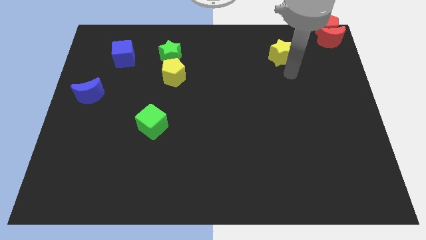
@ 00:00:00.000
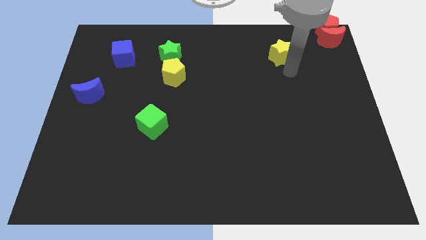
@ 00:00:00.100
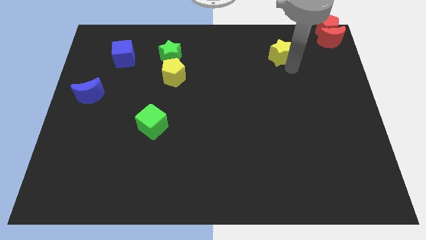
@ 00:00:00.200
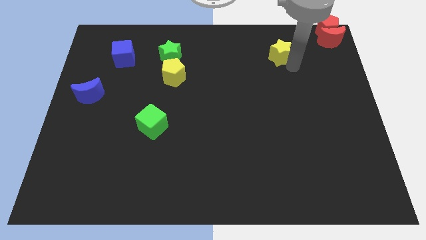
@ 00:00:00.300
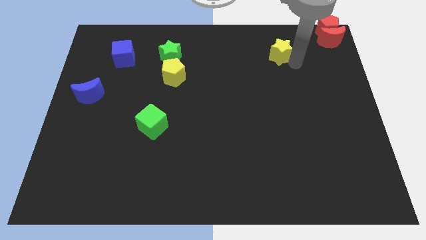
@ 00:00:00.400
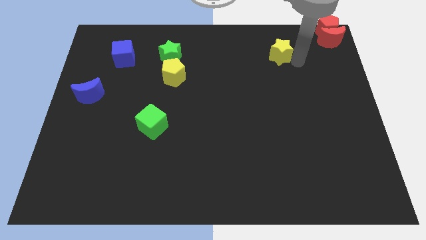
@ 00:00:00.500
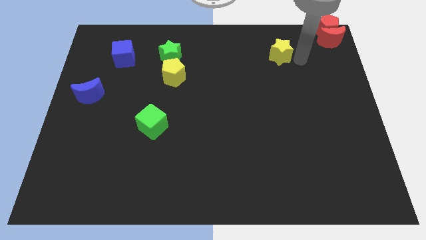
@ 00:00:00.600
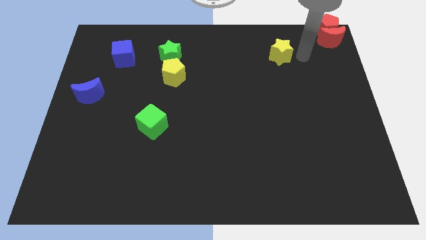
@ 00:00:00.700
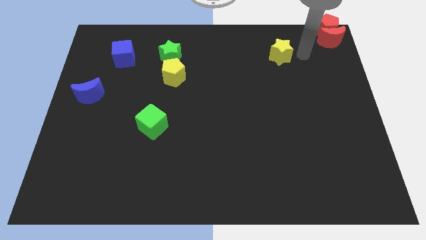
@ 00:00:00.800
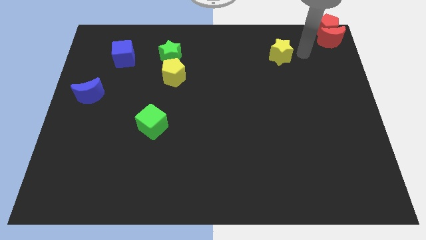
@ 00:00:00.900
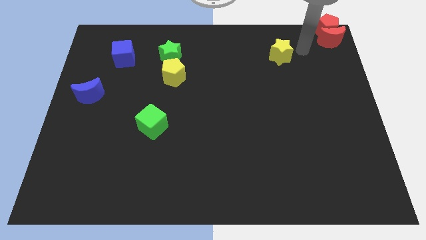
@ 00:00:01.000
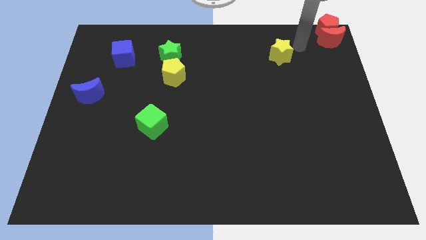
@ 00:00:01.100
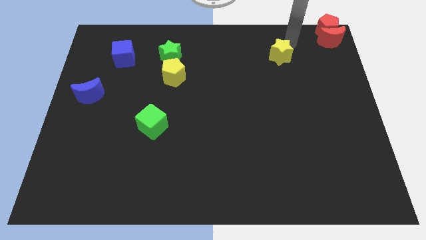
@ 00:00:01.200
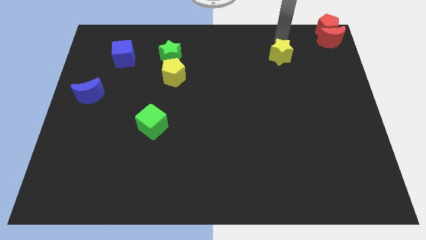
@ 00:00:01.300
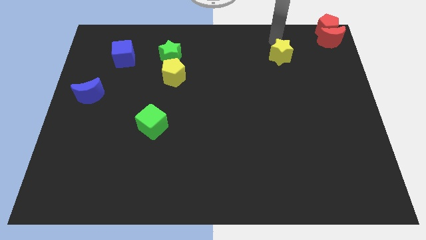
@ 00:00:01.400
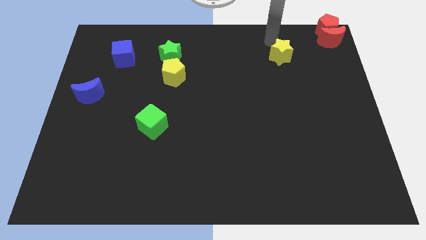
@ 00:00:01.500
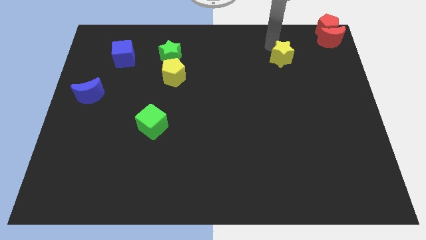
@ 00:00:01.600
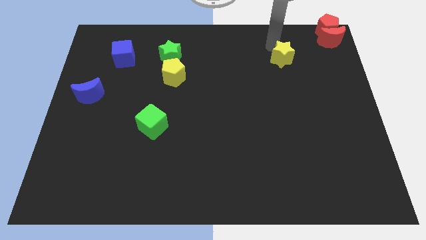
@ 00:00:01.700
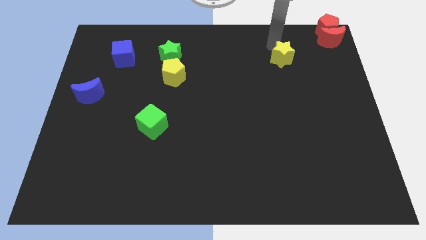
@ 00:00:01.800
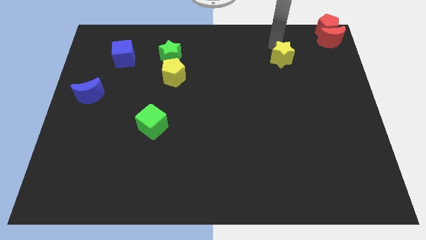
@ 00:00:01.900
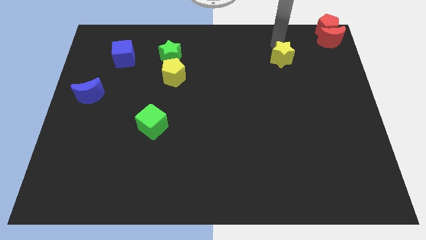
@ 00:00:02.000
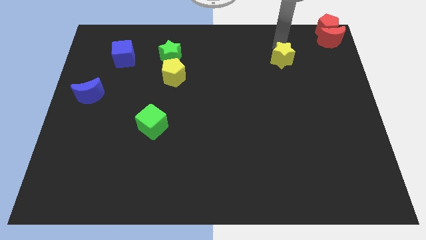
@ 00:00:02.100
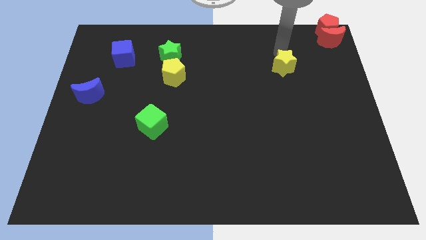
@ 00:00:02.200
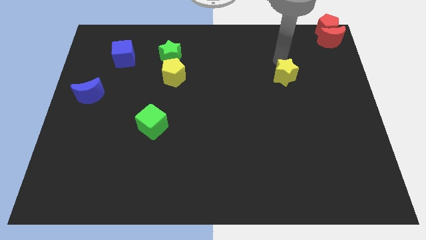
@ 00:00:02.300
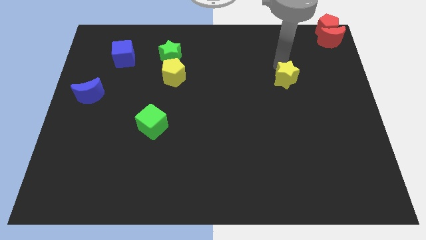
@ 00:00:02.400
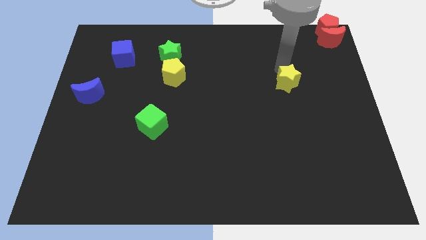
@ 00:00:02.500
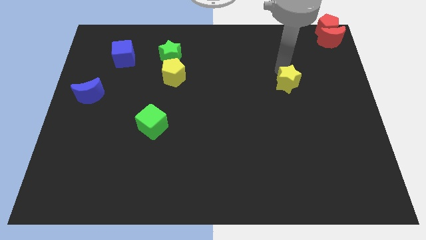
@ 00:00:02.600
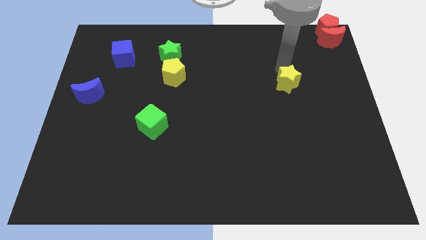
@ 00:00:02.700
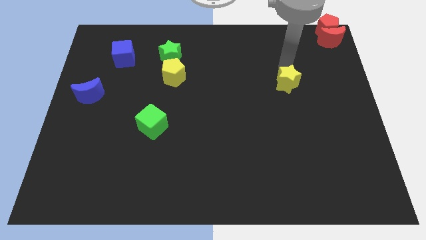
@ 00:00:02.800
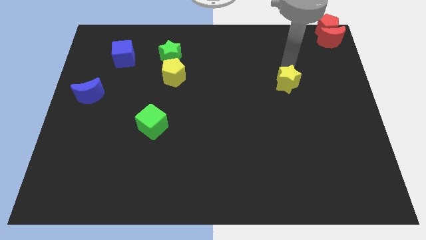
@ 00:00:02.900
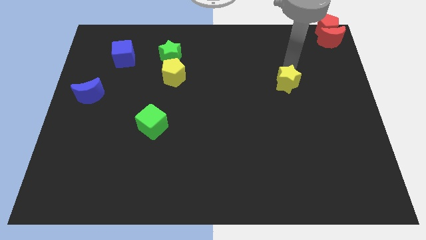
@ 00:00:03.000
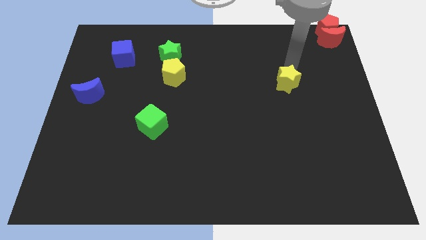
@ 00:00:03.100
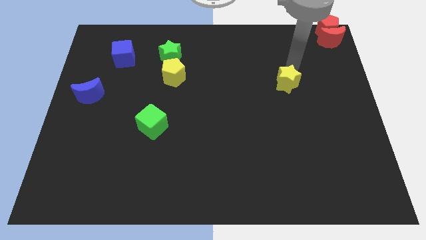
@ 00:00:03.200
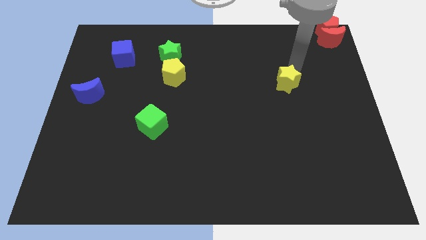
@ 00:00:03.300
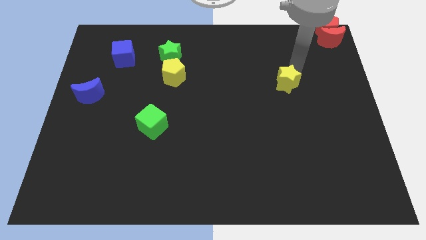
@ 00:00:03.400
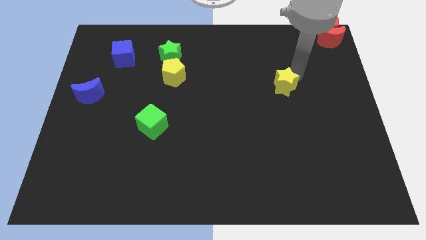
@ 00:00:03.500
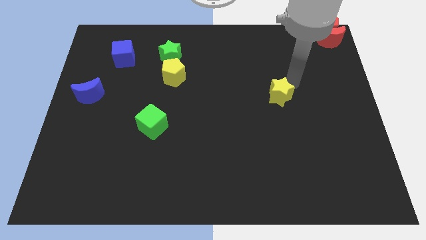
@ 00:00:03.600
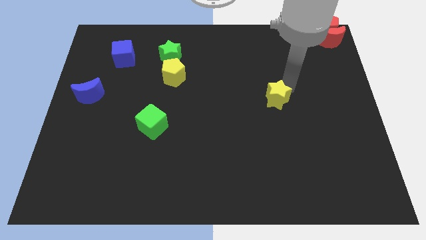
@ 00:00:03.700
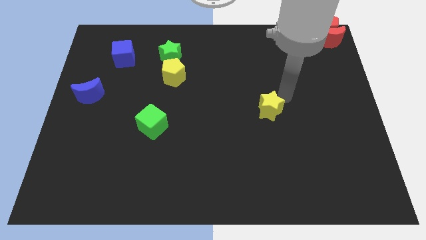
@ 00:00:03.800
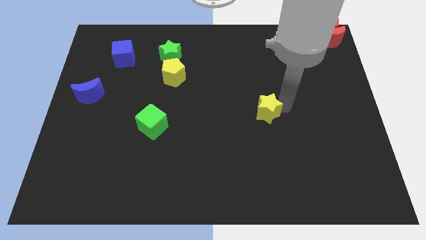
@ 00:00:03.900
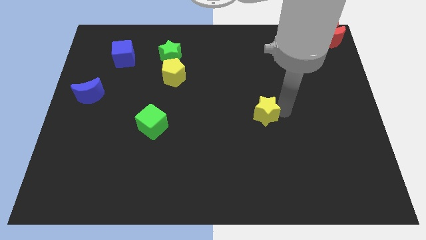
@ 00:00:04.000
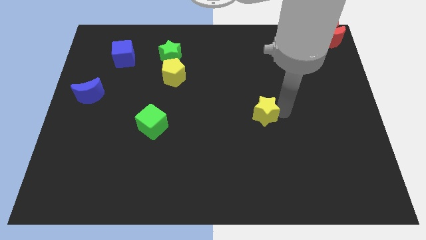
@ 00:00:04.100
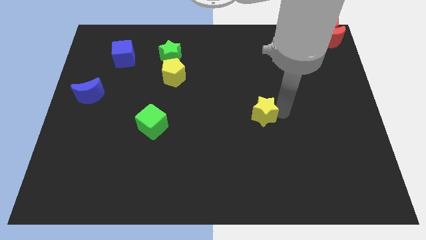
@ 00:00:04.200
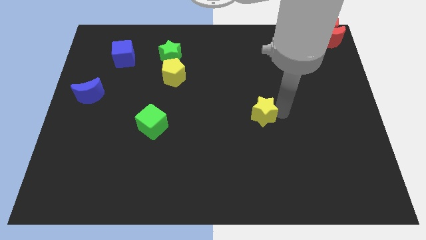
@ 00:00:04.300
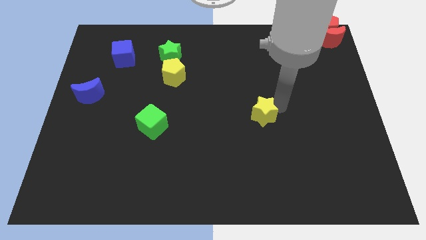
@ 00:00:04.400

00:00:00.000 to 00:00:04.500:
push the yellow star towards the bottom side

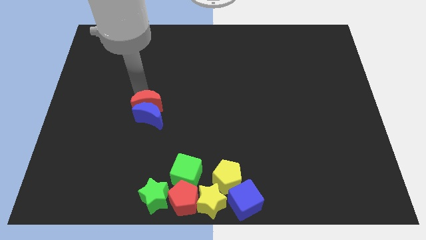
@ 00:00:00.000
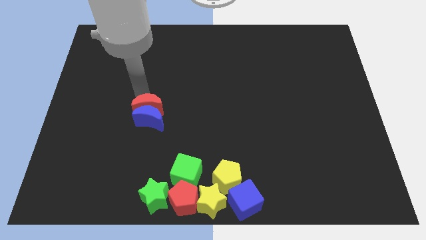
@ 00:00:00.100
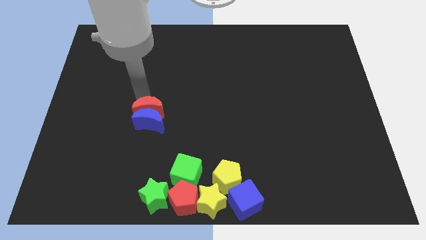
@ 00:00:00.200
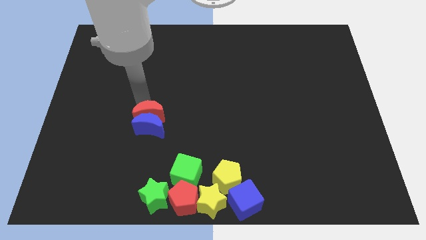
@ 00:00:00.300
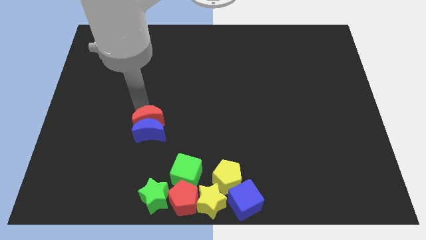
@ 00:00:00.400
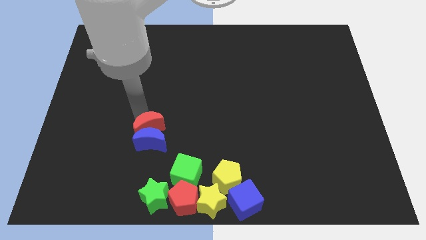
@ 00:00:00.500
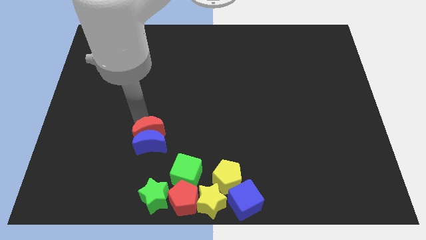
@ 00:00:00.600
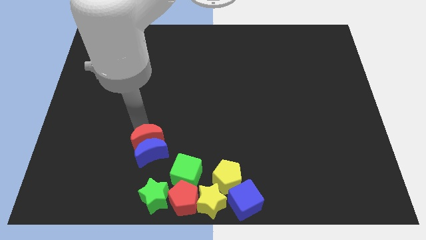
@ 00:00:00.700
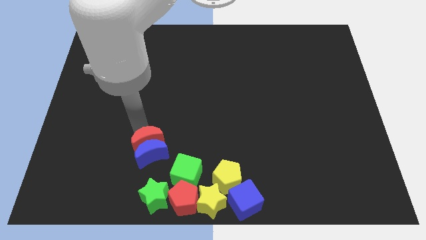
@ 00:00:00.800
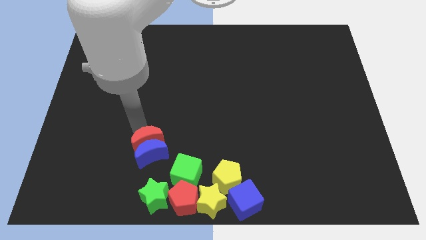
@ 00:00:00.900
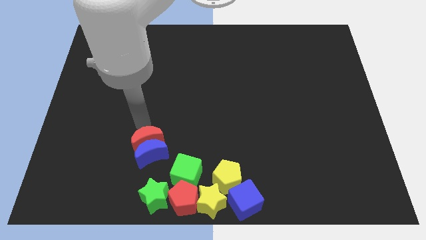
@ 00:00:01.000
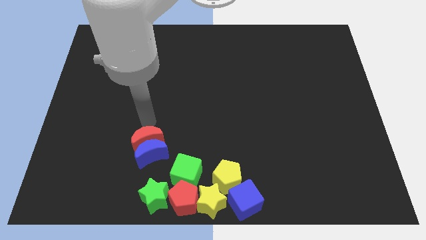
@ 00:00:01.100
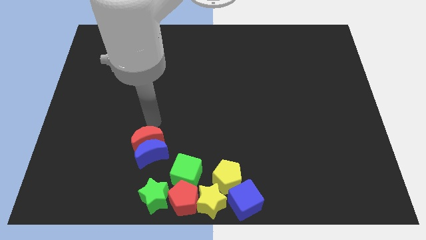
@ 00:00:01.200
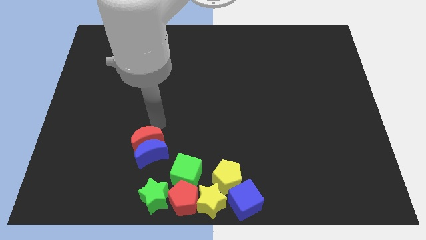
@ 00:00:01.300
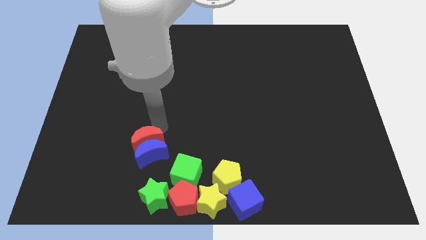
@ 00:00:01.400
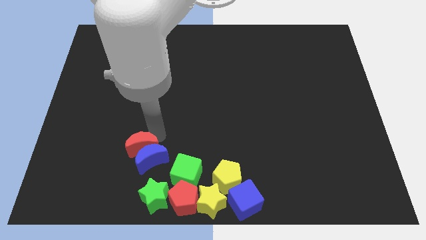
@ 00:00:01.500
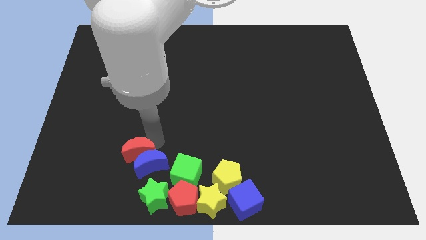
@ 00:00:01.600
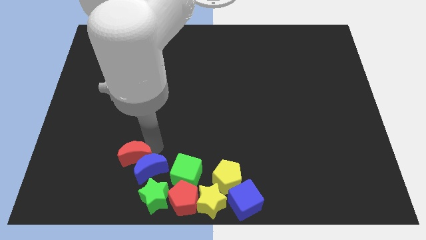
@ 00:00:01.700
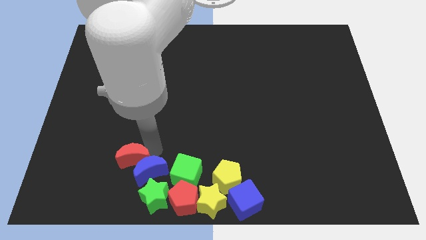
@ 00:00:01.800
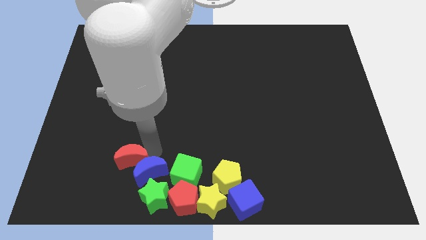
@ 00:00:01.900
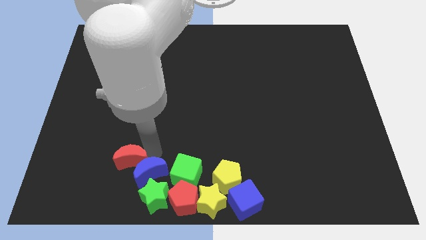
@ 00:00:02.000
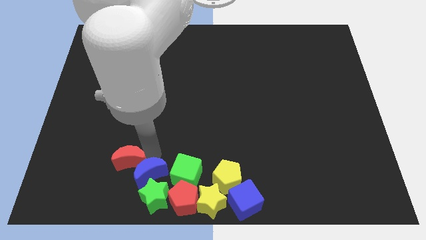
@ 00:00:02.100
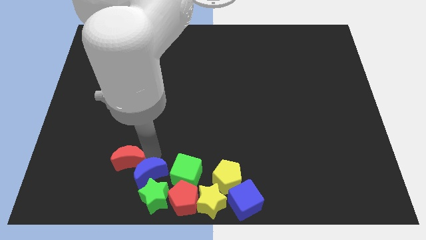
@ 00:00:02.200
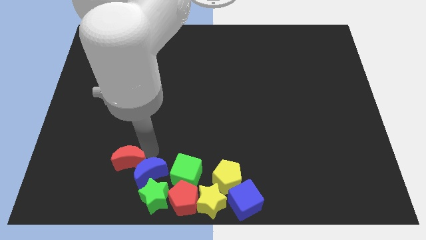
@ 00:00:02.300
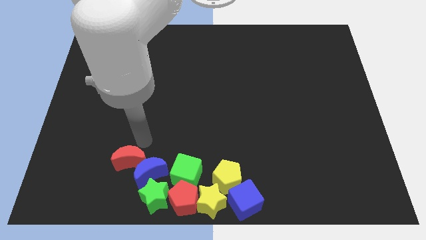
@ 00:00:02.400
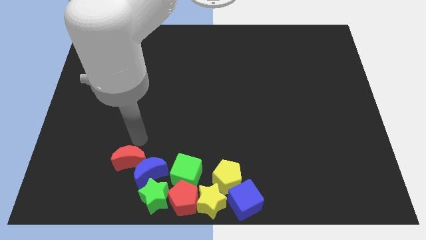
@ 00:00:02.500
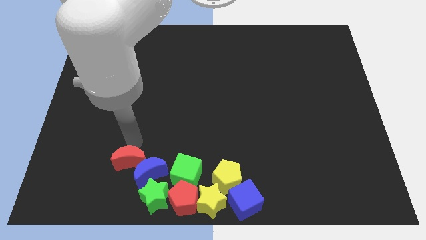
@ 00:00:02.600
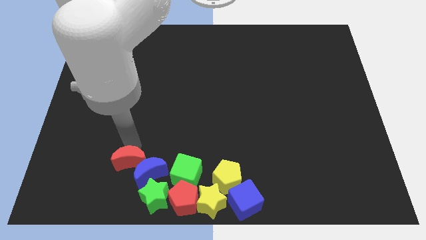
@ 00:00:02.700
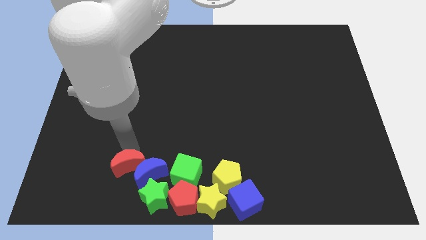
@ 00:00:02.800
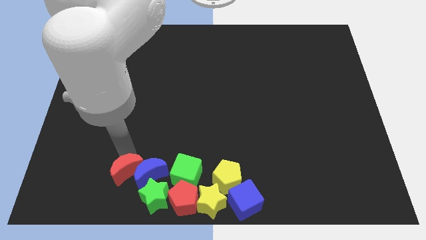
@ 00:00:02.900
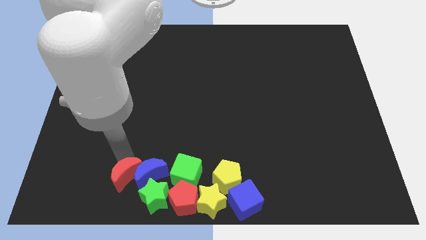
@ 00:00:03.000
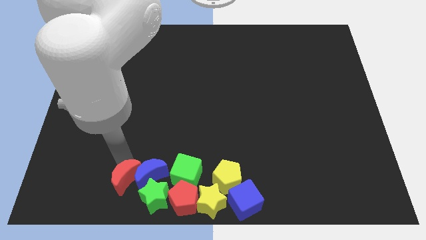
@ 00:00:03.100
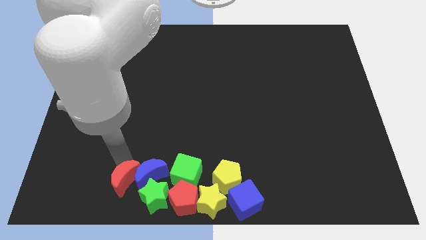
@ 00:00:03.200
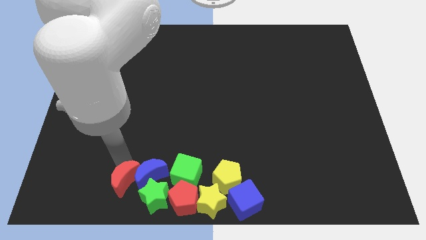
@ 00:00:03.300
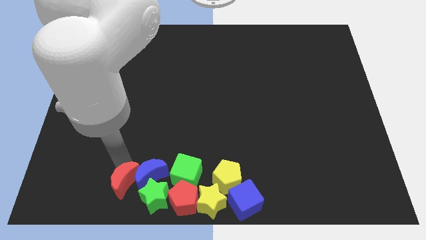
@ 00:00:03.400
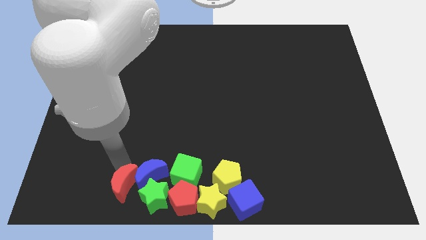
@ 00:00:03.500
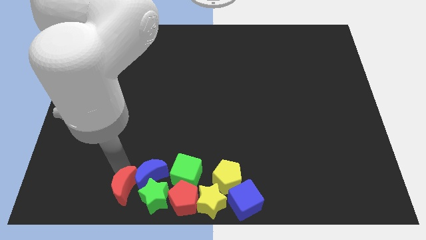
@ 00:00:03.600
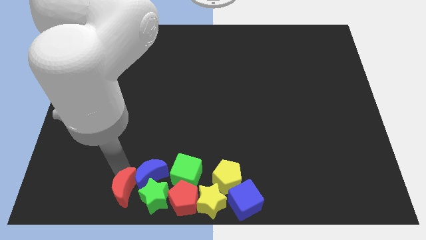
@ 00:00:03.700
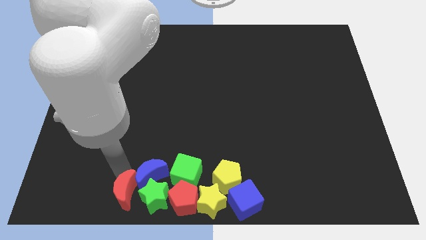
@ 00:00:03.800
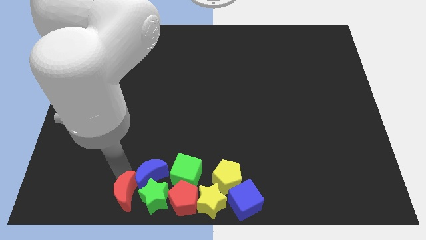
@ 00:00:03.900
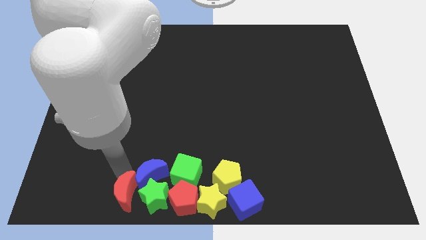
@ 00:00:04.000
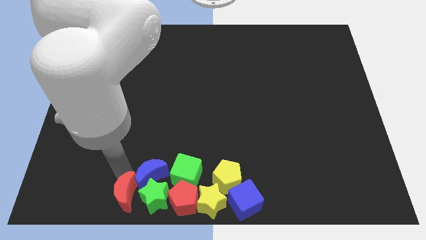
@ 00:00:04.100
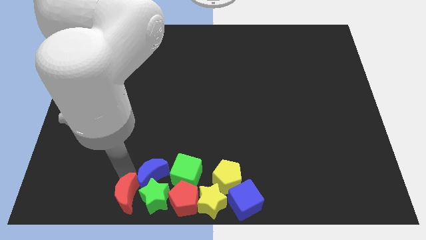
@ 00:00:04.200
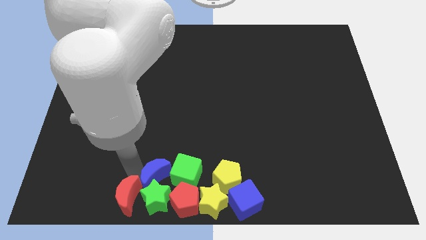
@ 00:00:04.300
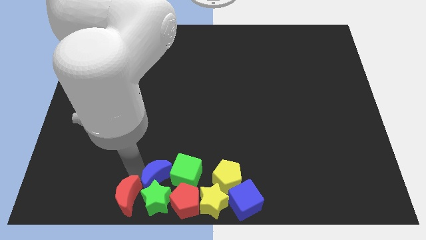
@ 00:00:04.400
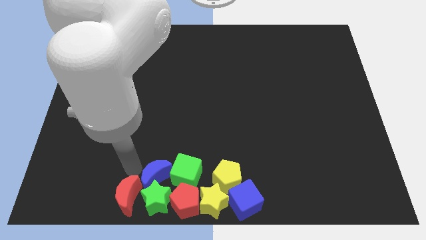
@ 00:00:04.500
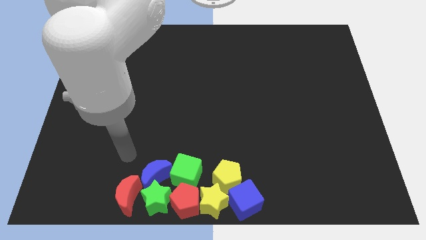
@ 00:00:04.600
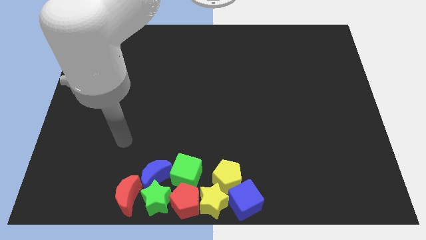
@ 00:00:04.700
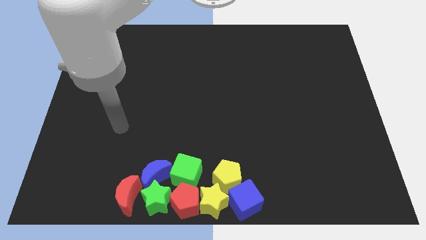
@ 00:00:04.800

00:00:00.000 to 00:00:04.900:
push the red moon along with the blue moon into the group of blocks
